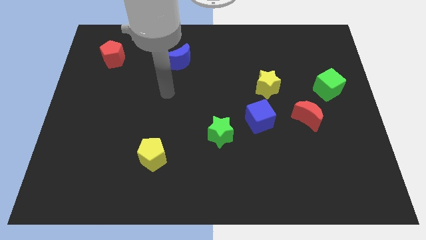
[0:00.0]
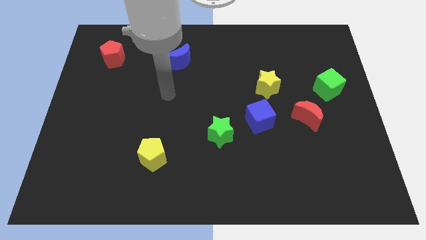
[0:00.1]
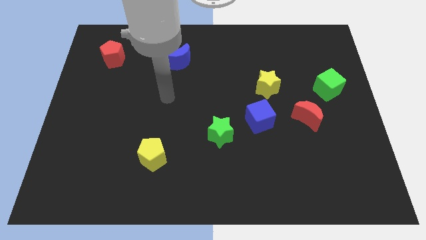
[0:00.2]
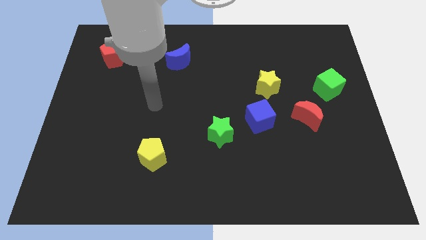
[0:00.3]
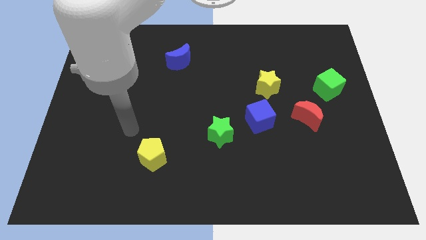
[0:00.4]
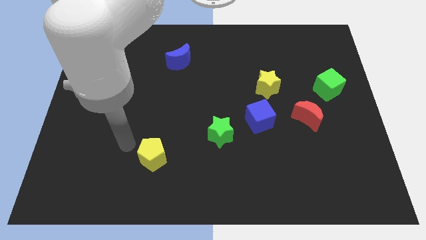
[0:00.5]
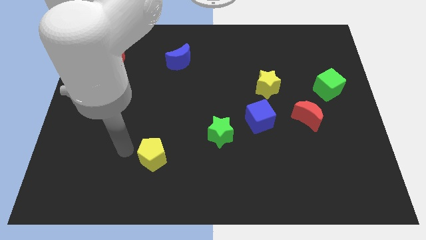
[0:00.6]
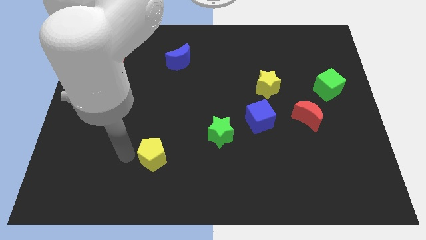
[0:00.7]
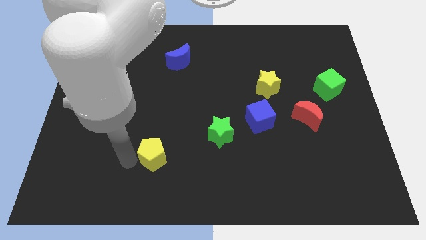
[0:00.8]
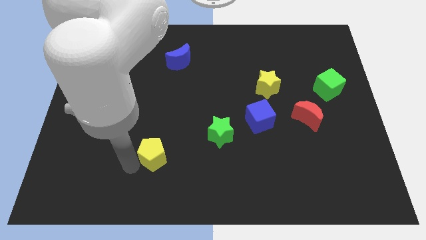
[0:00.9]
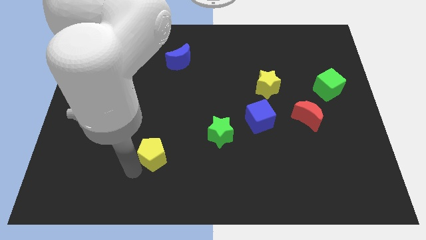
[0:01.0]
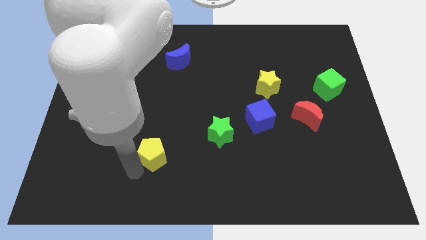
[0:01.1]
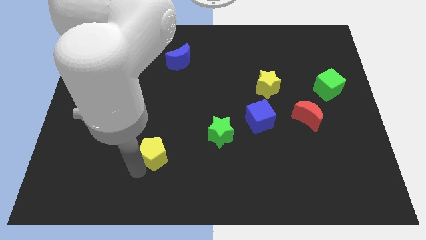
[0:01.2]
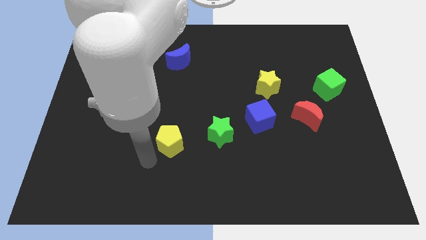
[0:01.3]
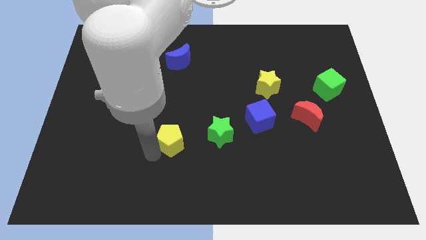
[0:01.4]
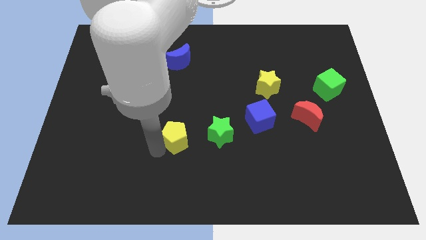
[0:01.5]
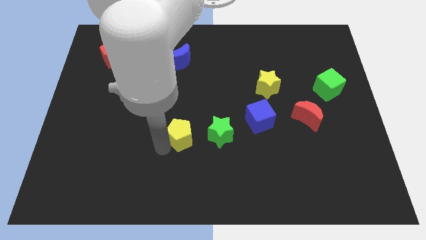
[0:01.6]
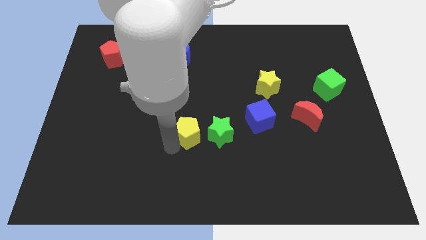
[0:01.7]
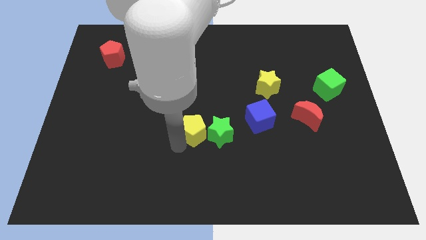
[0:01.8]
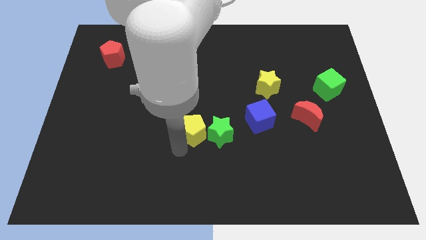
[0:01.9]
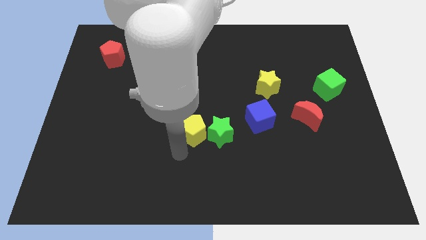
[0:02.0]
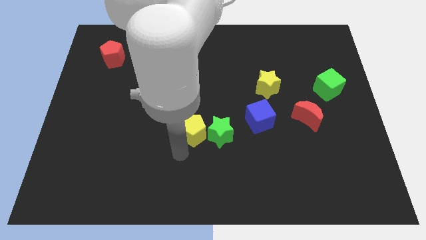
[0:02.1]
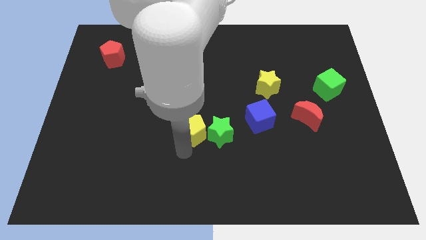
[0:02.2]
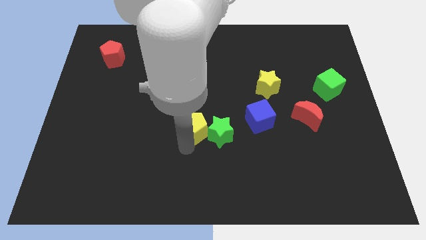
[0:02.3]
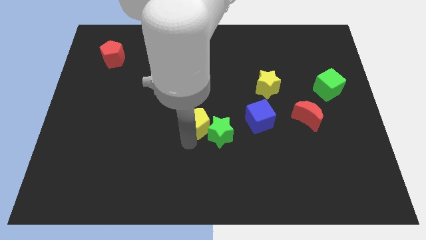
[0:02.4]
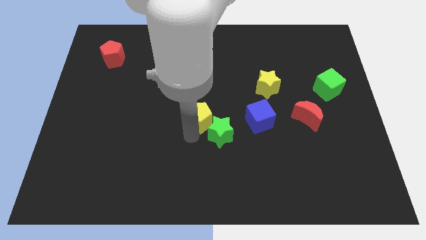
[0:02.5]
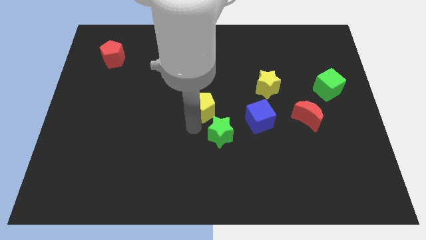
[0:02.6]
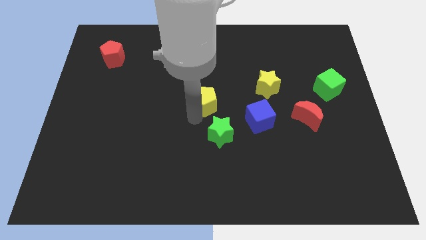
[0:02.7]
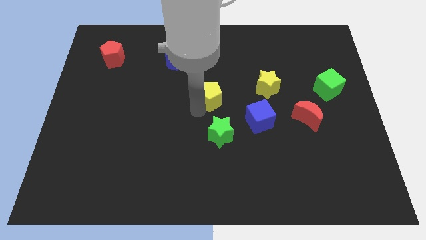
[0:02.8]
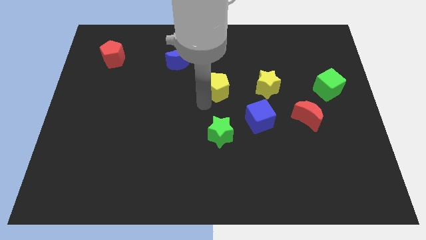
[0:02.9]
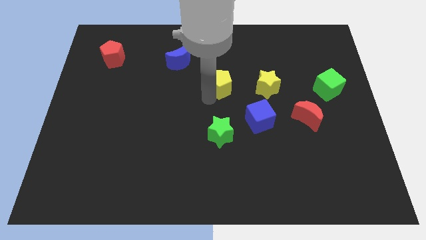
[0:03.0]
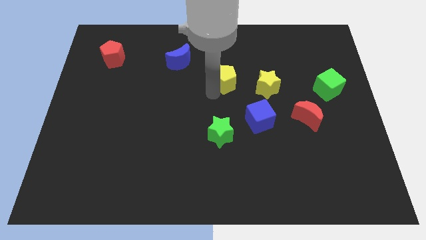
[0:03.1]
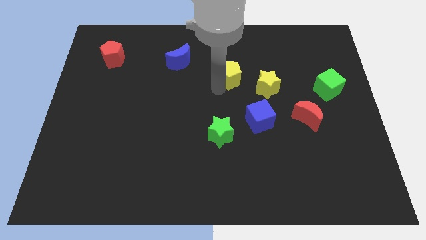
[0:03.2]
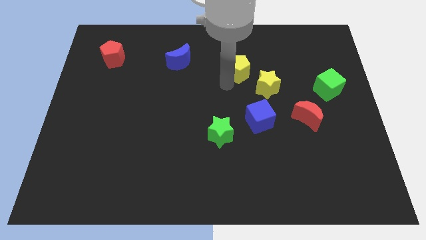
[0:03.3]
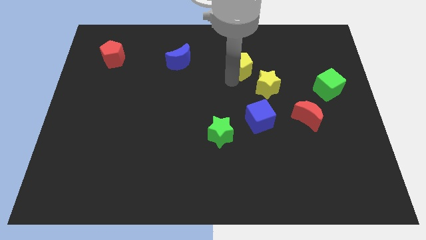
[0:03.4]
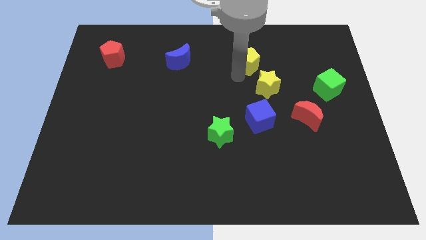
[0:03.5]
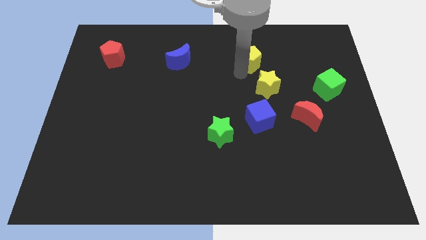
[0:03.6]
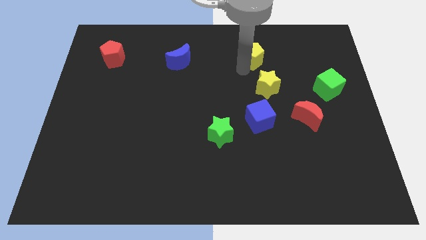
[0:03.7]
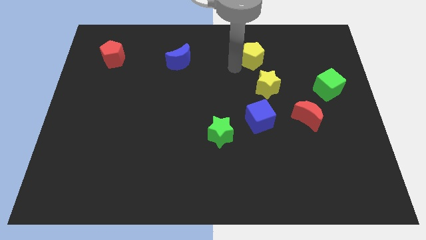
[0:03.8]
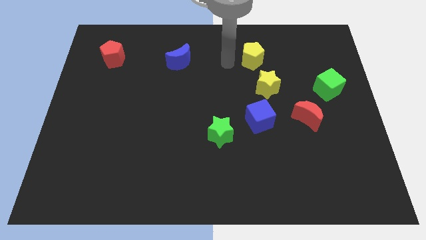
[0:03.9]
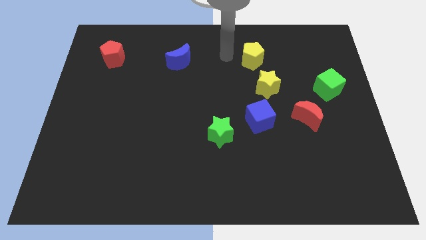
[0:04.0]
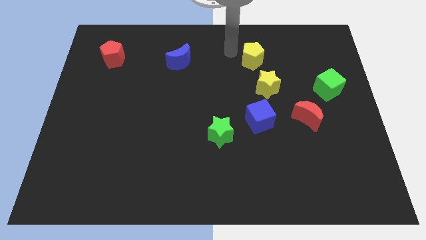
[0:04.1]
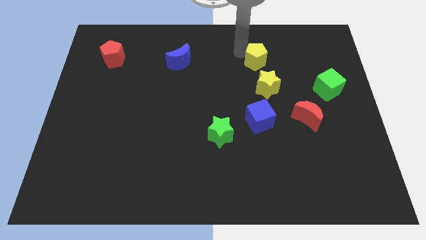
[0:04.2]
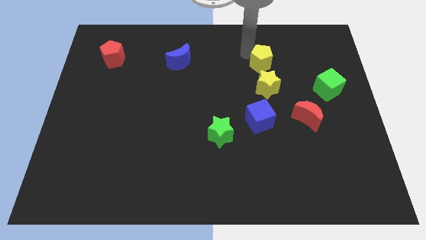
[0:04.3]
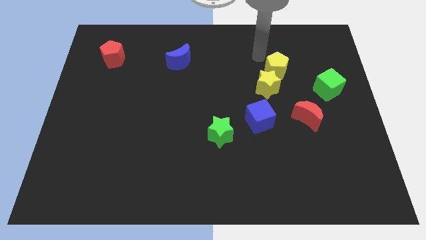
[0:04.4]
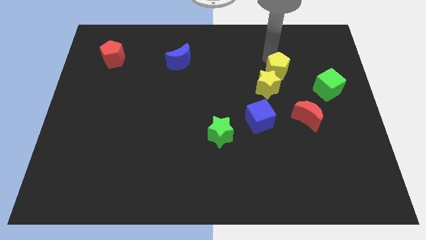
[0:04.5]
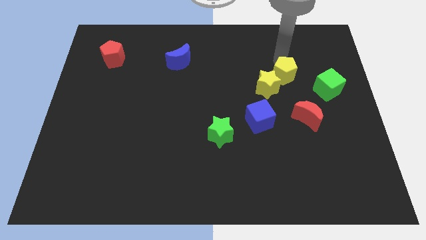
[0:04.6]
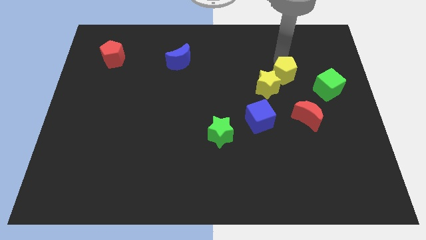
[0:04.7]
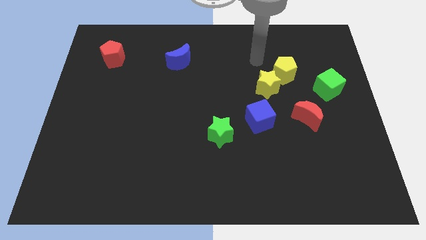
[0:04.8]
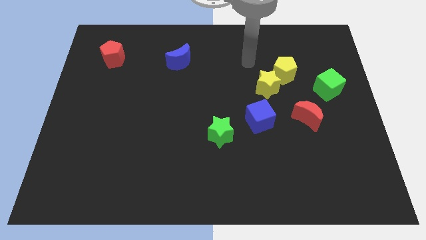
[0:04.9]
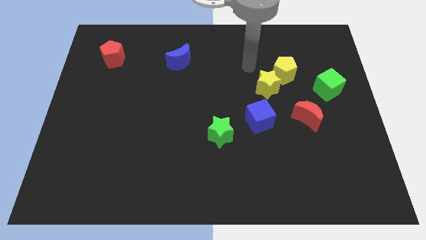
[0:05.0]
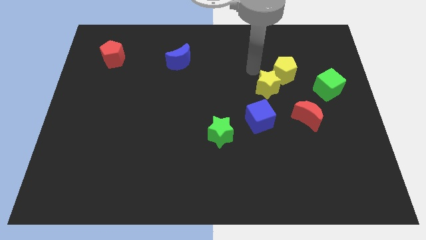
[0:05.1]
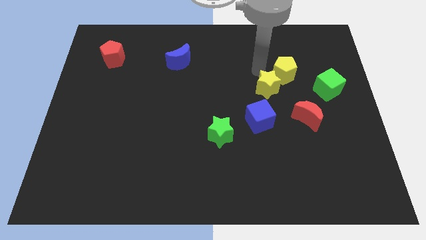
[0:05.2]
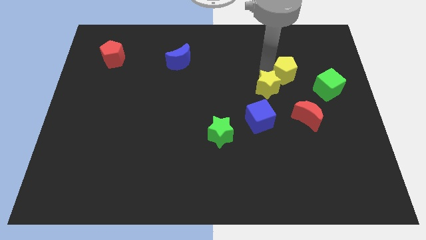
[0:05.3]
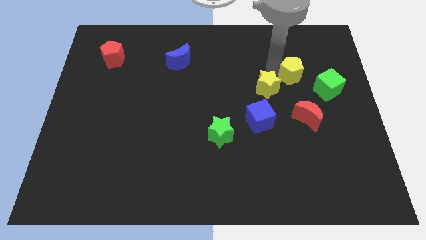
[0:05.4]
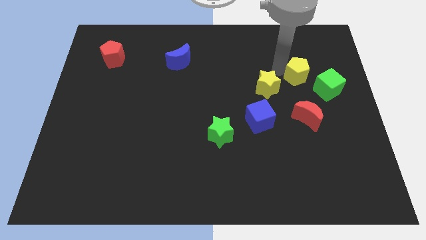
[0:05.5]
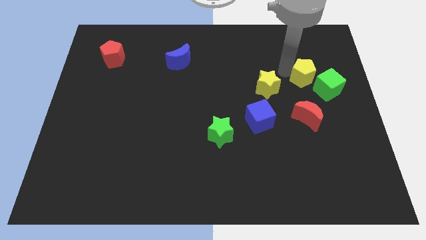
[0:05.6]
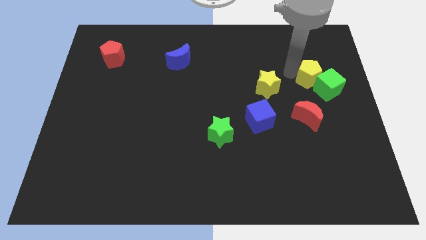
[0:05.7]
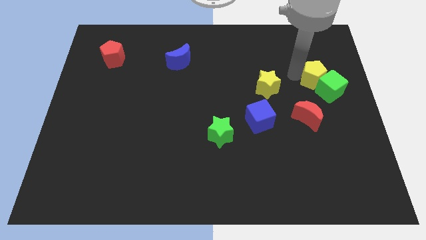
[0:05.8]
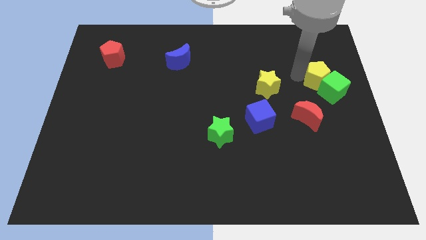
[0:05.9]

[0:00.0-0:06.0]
push the yellow pentagon towards the green cube

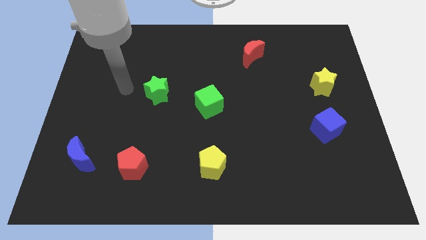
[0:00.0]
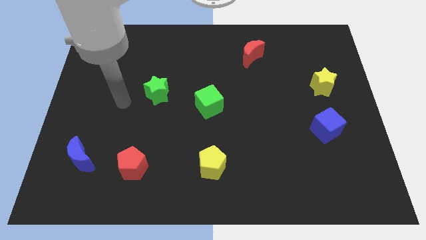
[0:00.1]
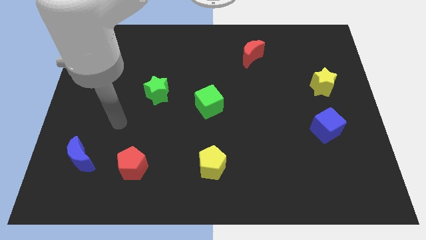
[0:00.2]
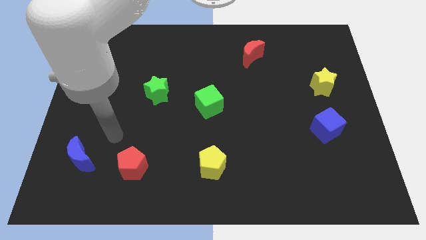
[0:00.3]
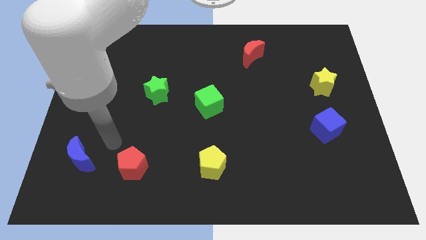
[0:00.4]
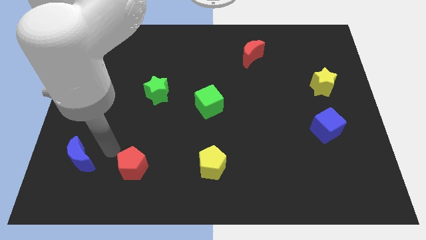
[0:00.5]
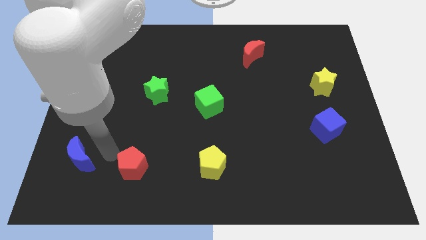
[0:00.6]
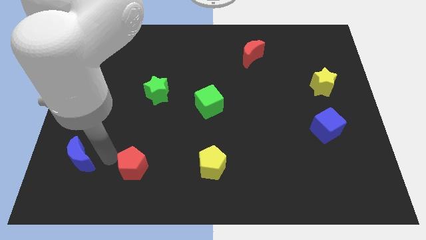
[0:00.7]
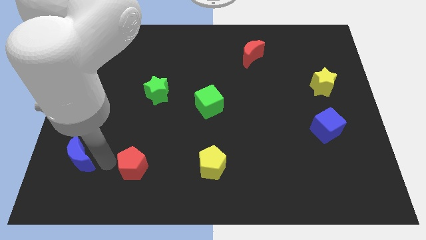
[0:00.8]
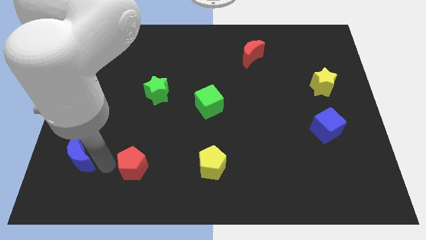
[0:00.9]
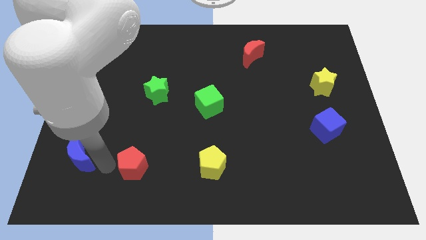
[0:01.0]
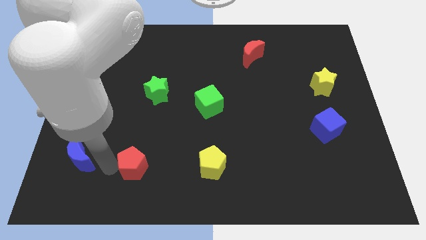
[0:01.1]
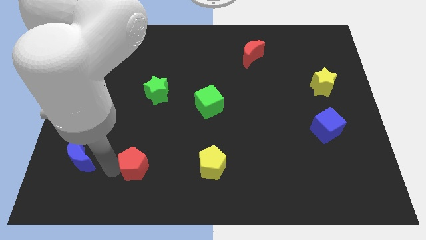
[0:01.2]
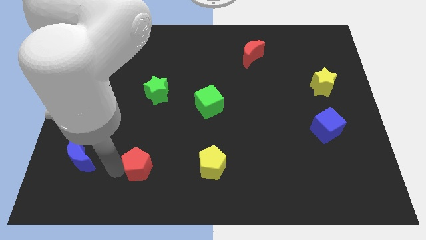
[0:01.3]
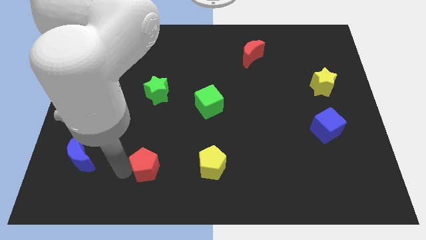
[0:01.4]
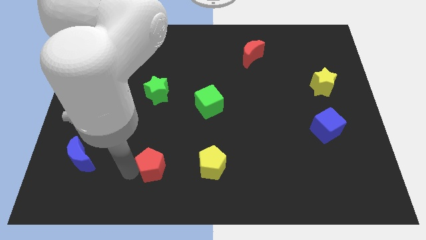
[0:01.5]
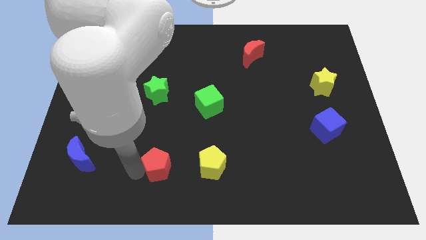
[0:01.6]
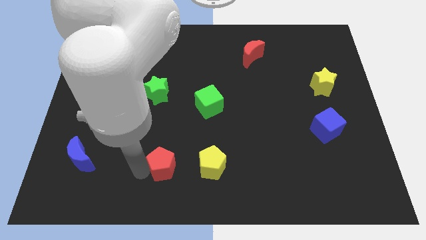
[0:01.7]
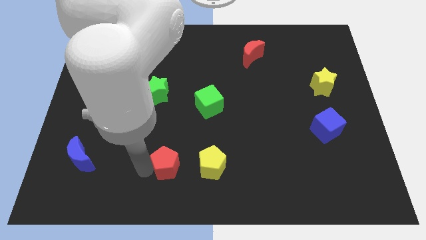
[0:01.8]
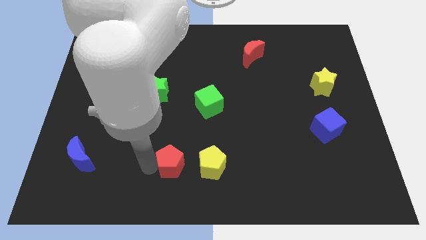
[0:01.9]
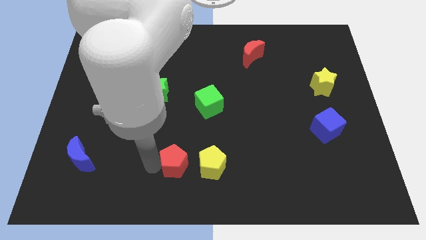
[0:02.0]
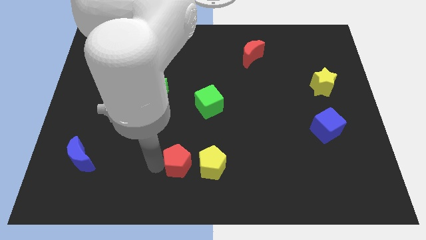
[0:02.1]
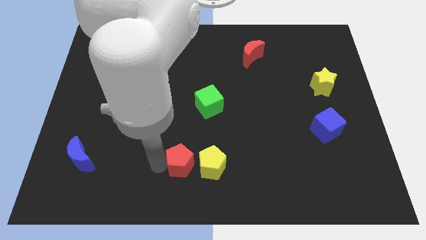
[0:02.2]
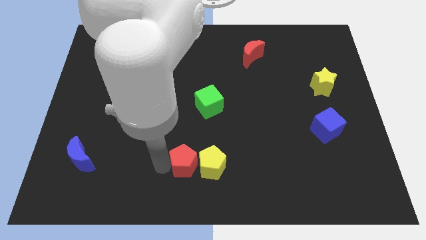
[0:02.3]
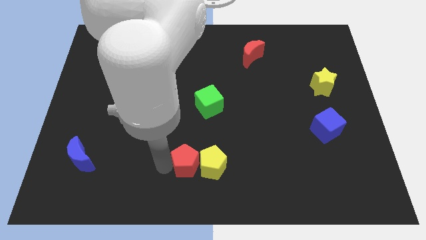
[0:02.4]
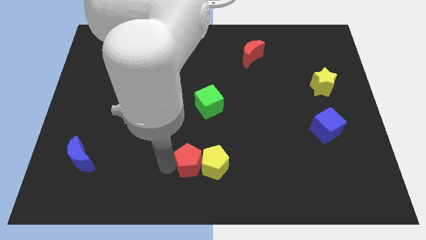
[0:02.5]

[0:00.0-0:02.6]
put the red pentagon close to the yellow pentagon
